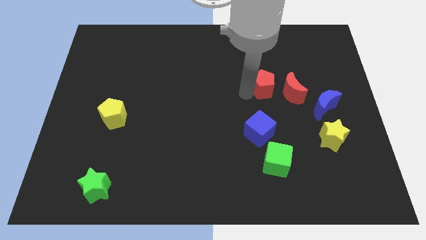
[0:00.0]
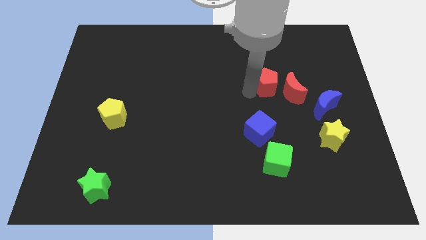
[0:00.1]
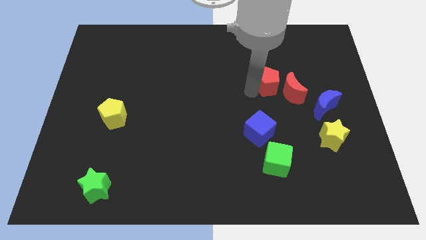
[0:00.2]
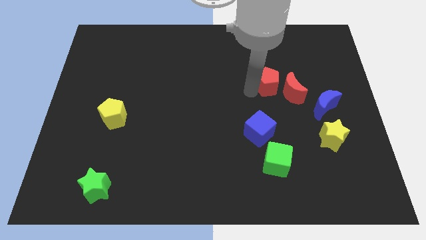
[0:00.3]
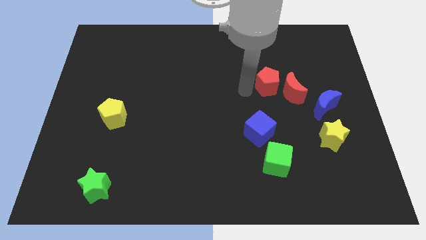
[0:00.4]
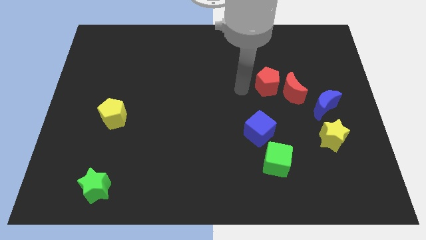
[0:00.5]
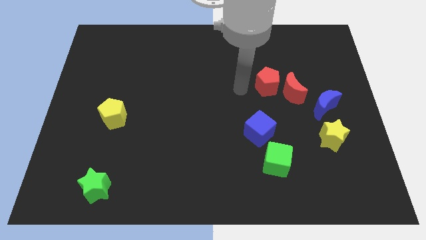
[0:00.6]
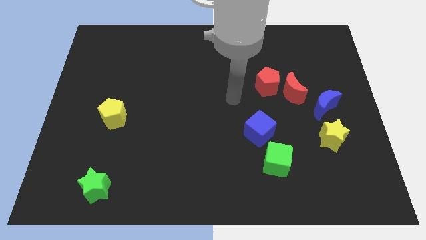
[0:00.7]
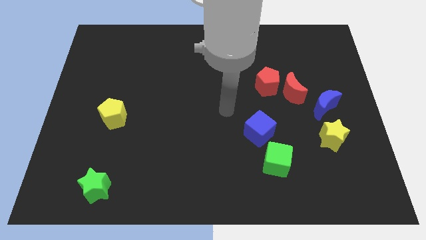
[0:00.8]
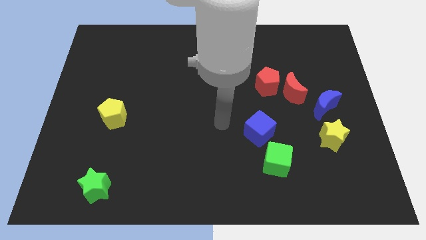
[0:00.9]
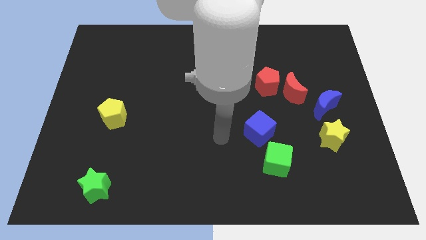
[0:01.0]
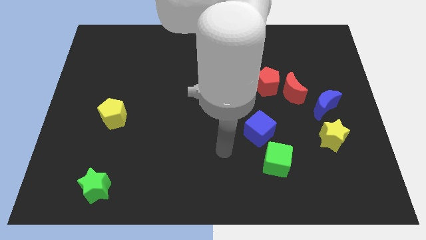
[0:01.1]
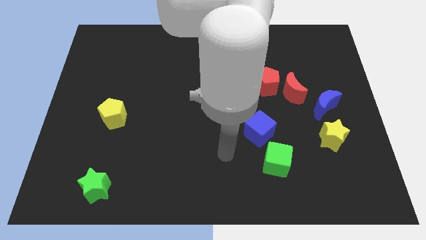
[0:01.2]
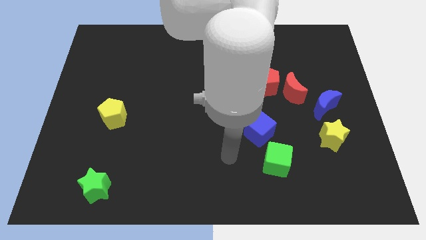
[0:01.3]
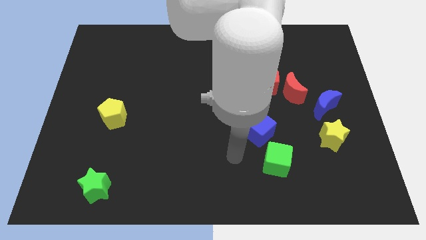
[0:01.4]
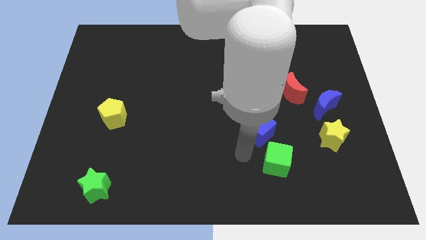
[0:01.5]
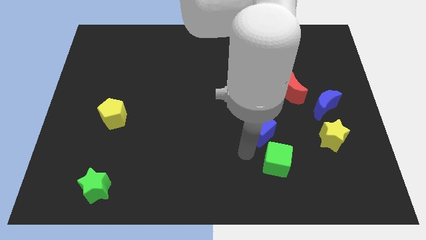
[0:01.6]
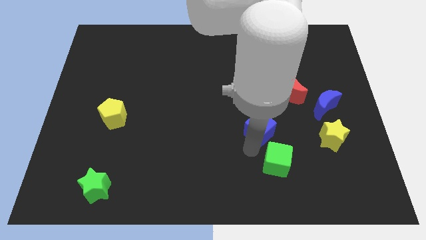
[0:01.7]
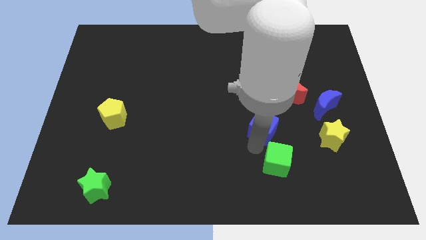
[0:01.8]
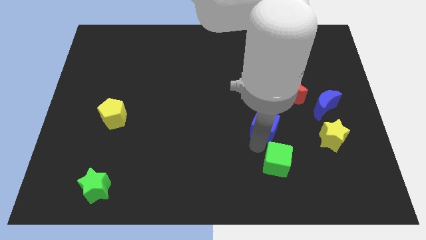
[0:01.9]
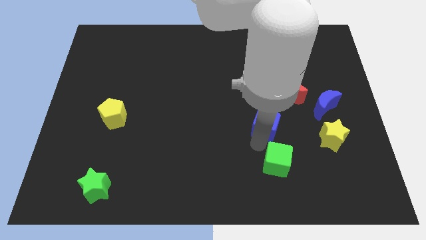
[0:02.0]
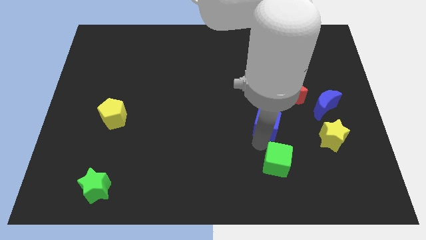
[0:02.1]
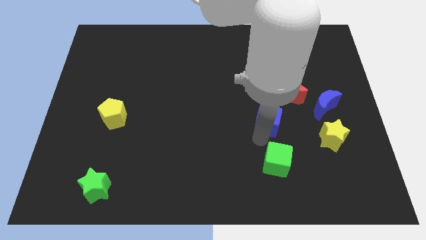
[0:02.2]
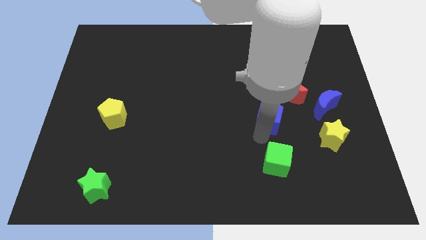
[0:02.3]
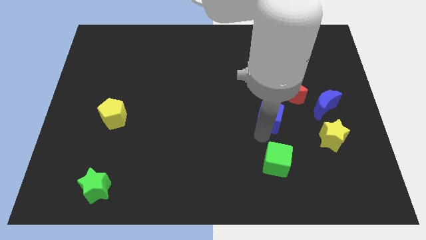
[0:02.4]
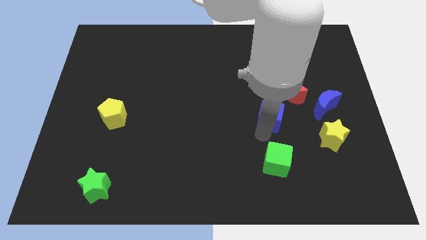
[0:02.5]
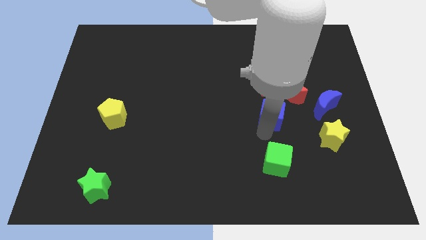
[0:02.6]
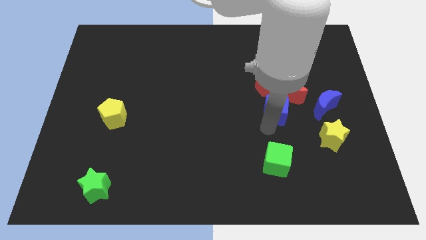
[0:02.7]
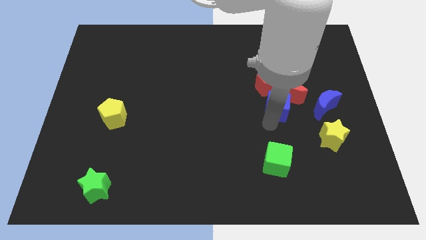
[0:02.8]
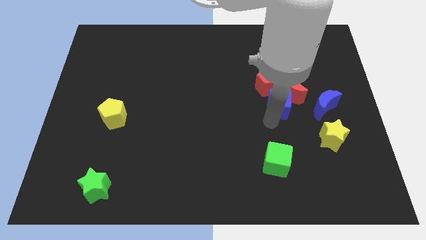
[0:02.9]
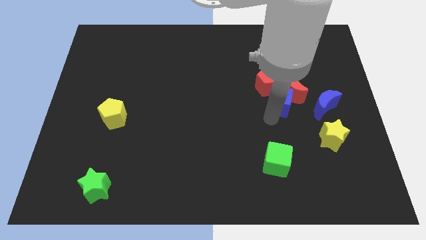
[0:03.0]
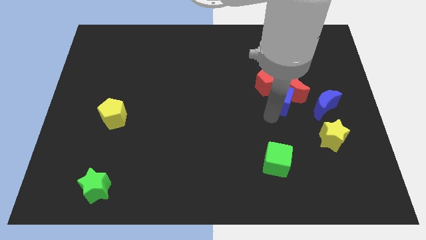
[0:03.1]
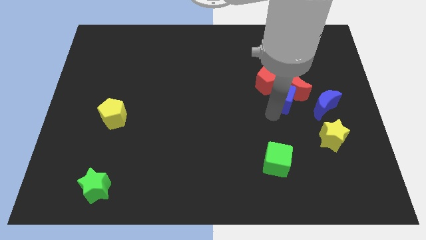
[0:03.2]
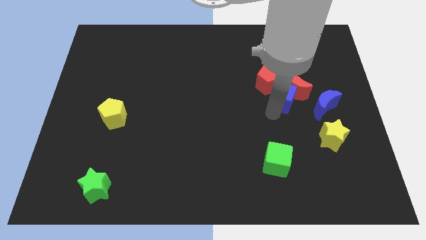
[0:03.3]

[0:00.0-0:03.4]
push the blue cube into the red blocks

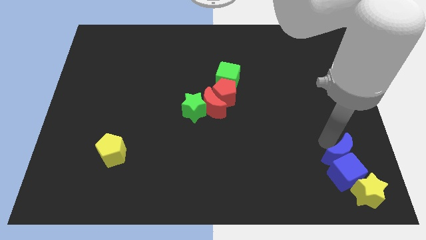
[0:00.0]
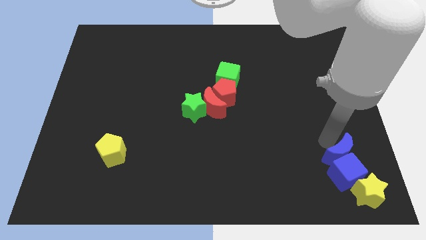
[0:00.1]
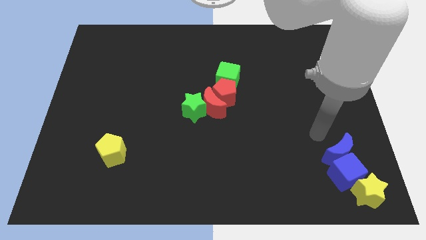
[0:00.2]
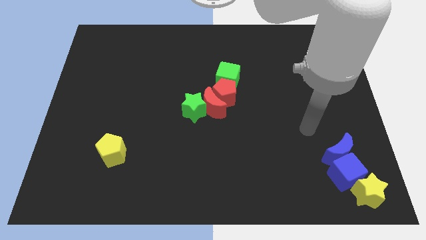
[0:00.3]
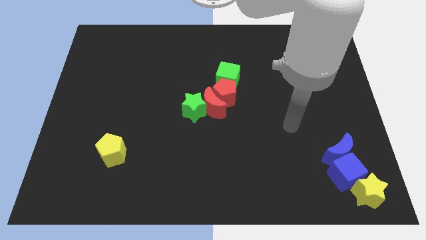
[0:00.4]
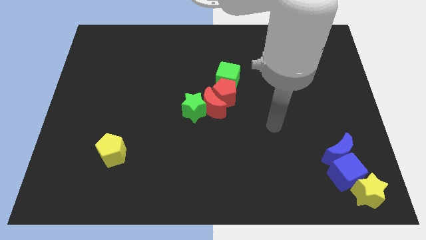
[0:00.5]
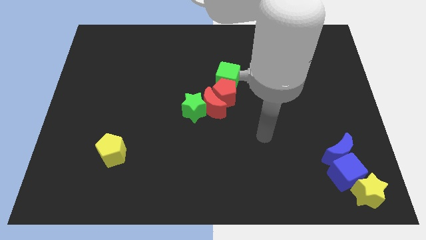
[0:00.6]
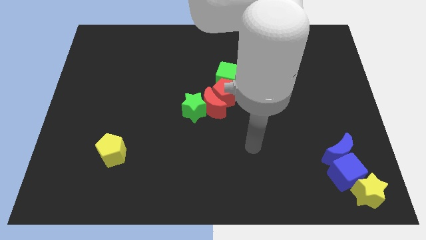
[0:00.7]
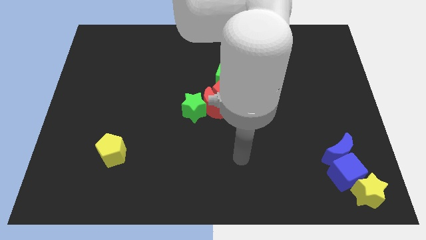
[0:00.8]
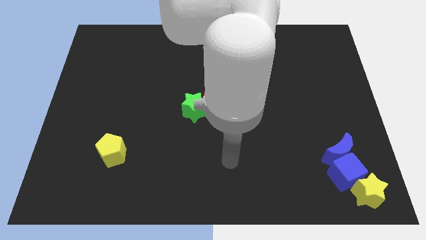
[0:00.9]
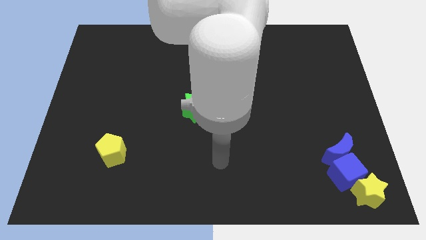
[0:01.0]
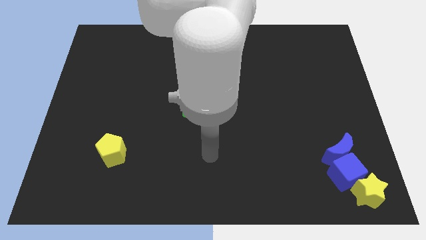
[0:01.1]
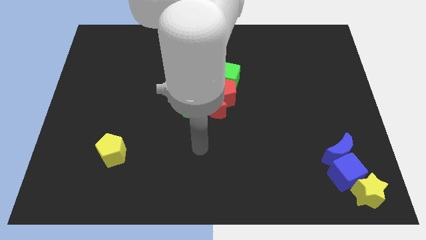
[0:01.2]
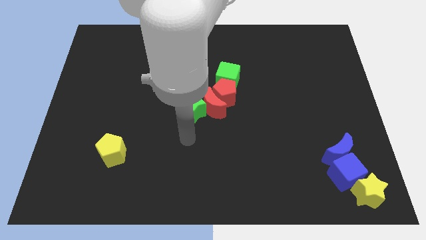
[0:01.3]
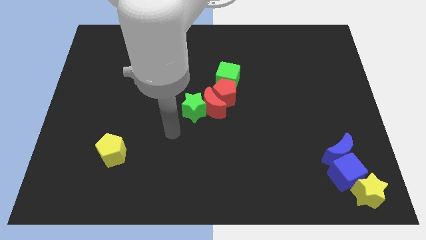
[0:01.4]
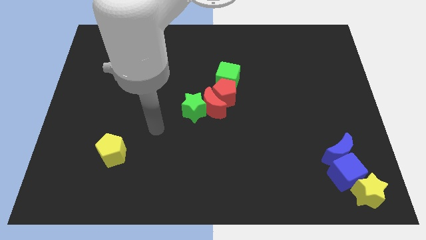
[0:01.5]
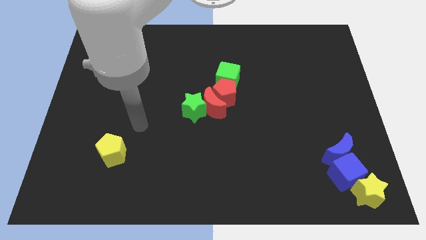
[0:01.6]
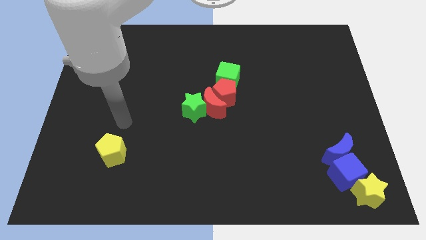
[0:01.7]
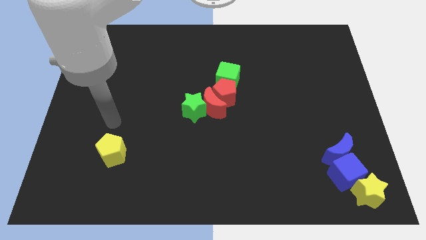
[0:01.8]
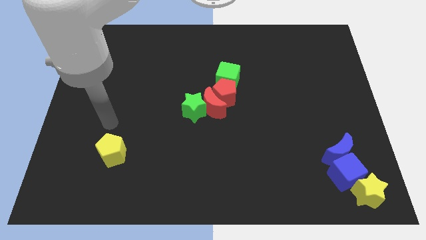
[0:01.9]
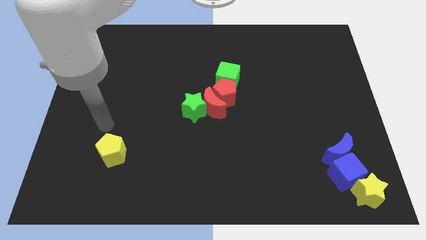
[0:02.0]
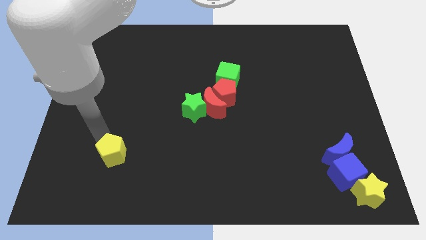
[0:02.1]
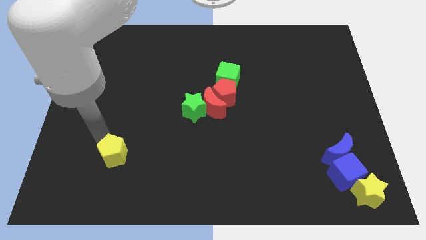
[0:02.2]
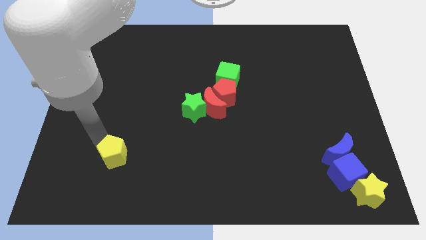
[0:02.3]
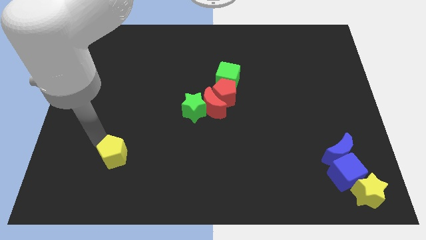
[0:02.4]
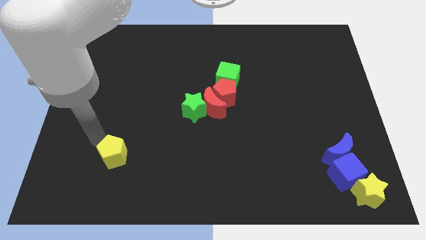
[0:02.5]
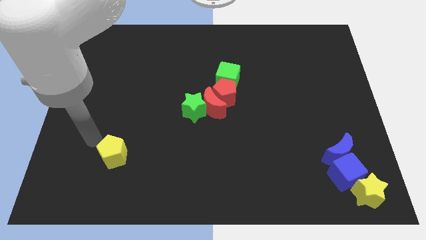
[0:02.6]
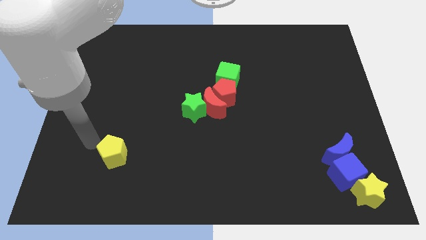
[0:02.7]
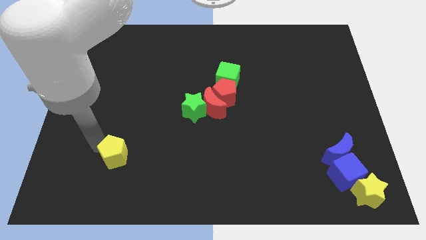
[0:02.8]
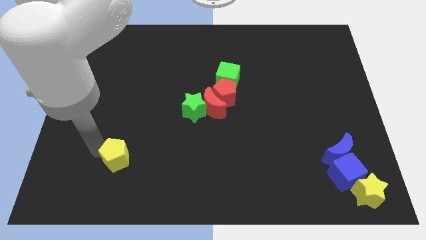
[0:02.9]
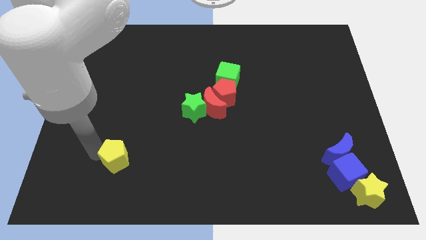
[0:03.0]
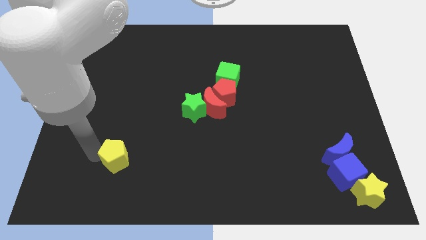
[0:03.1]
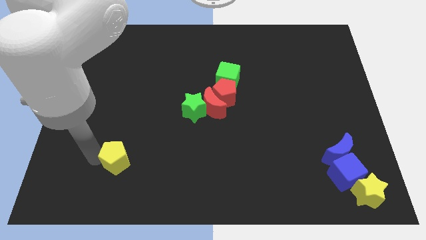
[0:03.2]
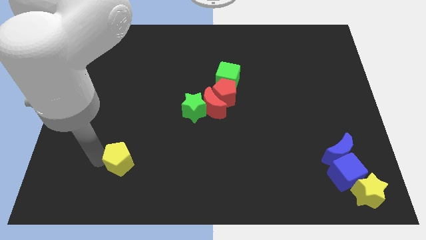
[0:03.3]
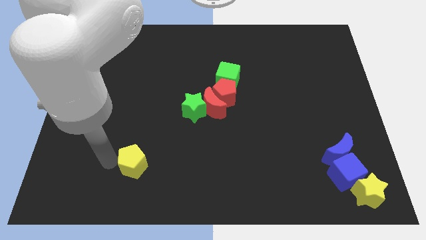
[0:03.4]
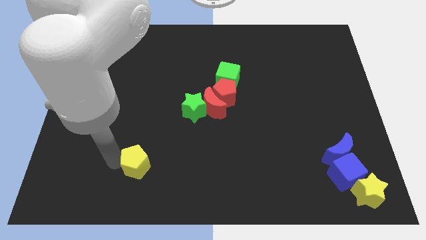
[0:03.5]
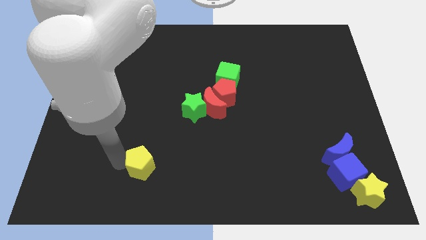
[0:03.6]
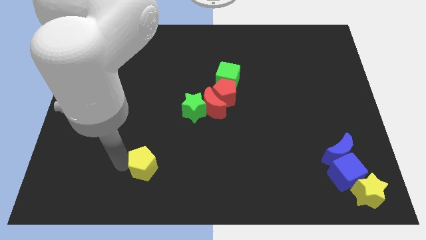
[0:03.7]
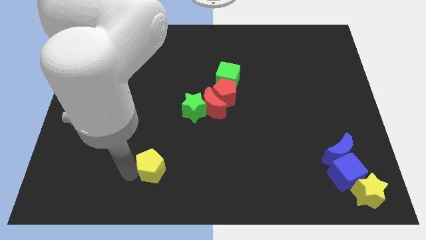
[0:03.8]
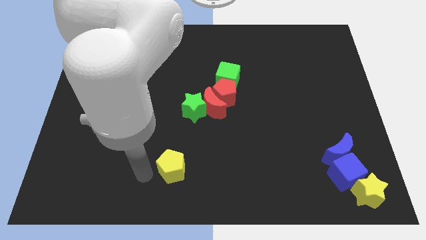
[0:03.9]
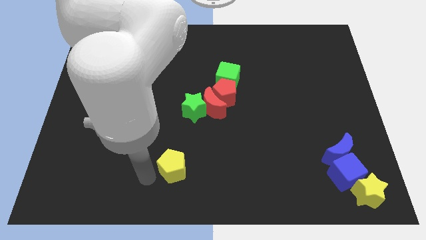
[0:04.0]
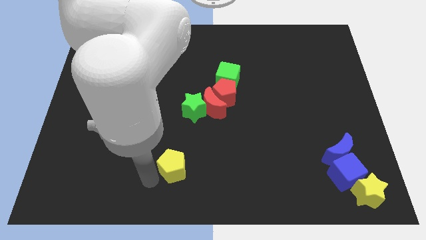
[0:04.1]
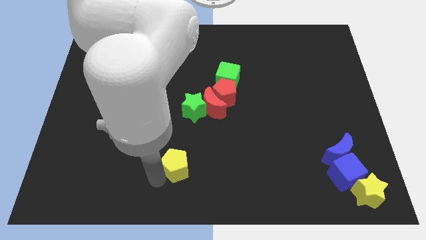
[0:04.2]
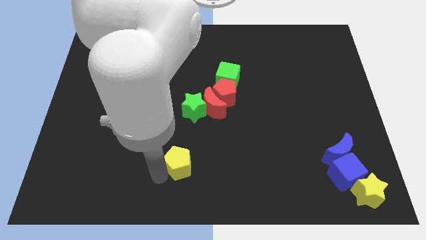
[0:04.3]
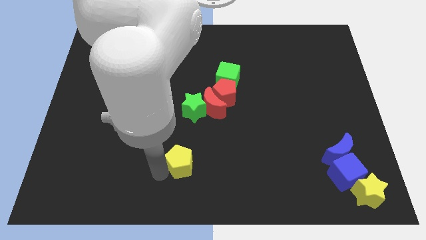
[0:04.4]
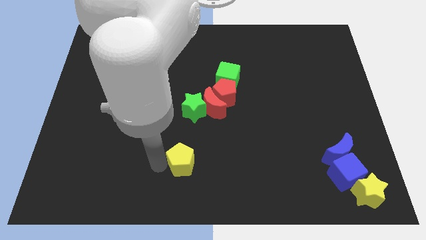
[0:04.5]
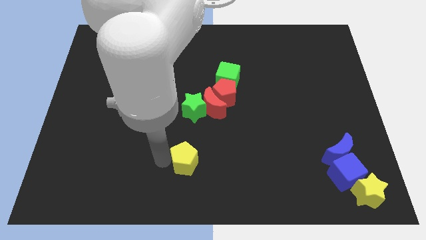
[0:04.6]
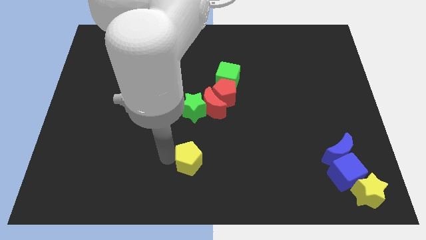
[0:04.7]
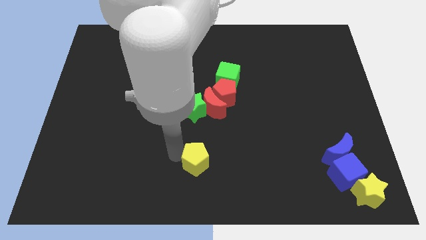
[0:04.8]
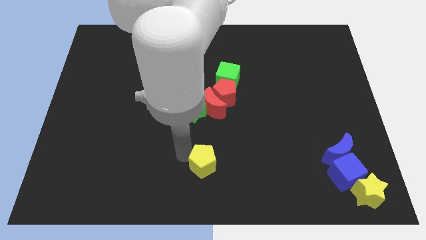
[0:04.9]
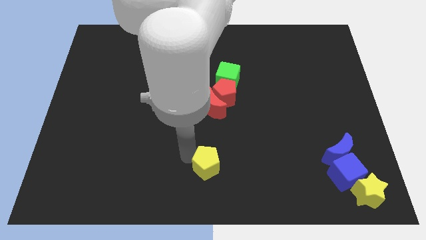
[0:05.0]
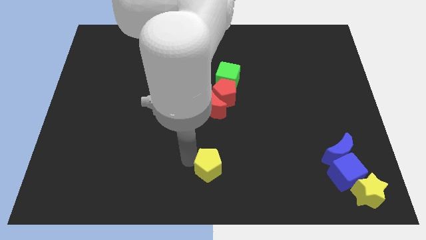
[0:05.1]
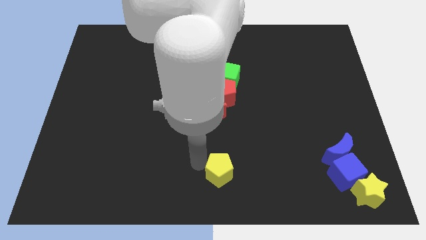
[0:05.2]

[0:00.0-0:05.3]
place the yellow pentagon below the red crescent

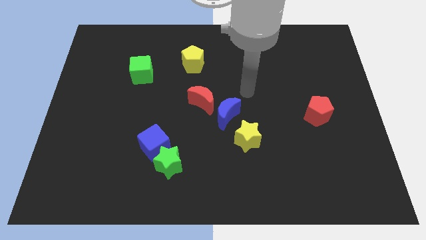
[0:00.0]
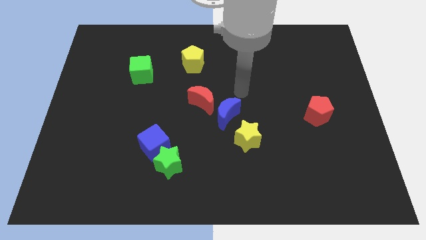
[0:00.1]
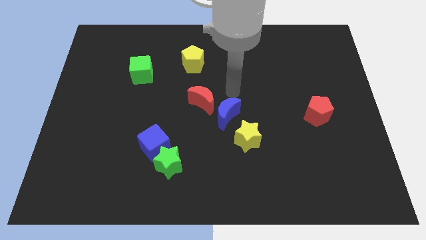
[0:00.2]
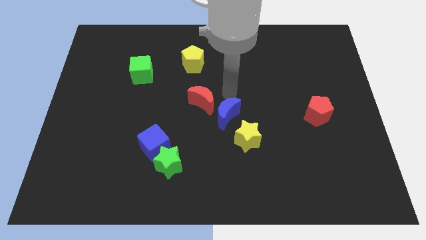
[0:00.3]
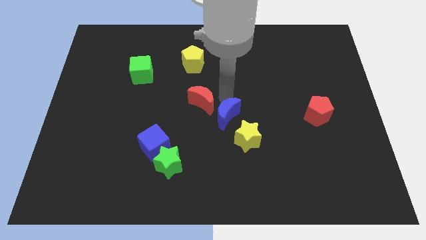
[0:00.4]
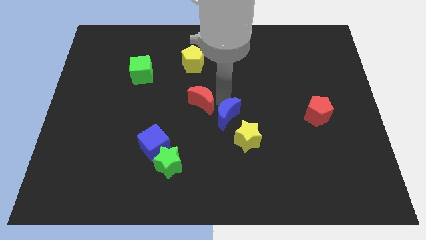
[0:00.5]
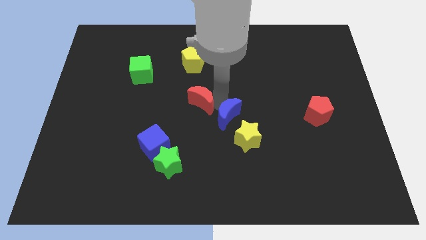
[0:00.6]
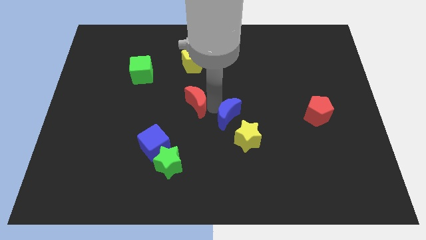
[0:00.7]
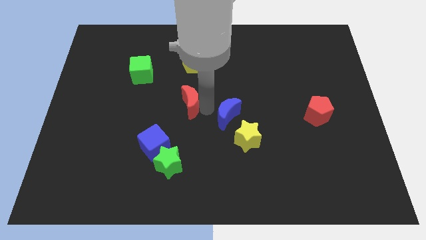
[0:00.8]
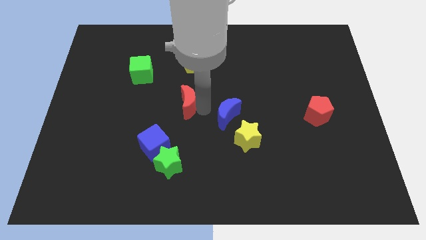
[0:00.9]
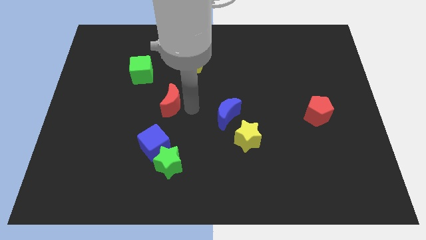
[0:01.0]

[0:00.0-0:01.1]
move red moon towards the green cube
